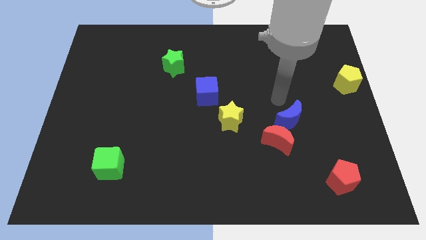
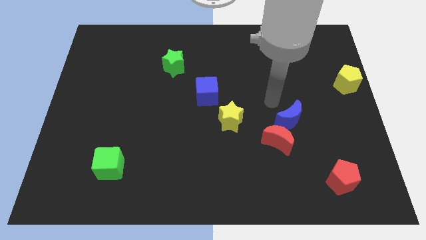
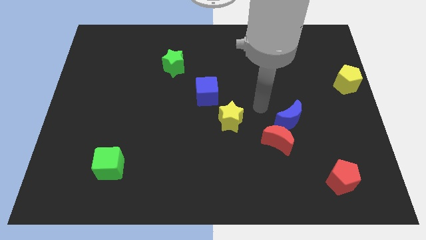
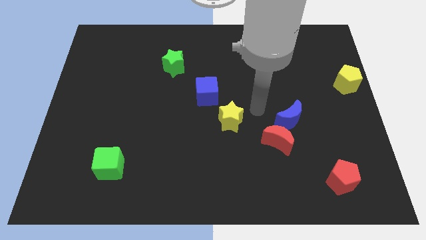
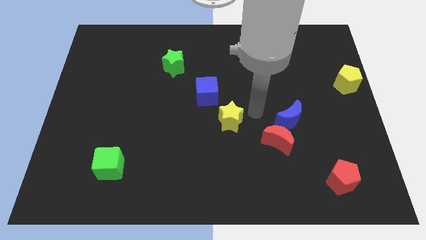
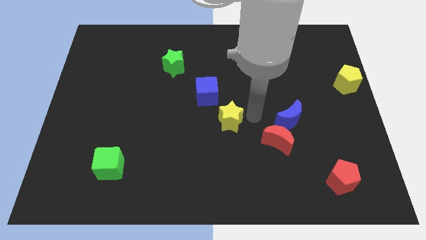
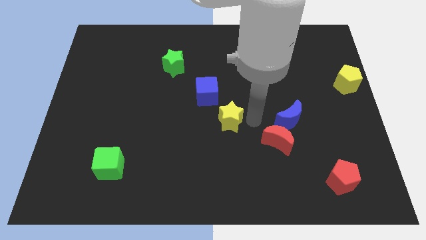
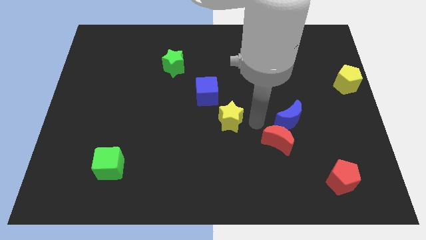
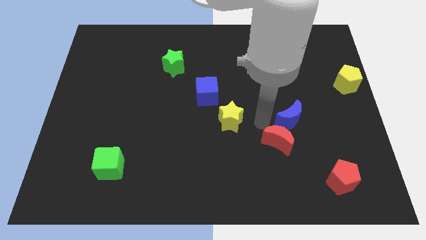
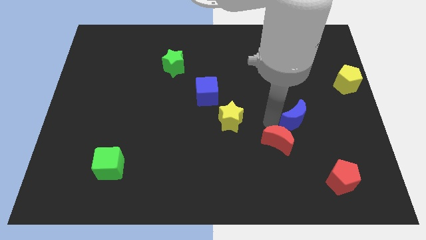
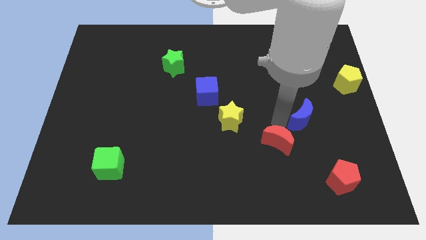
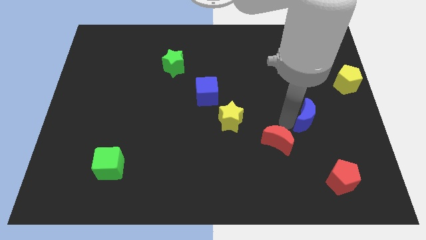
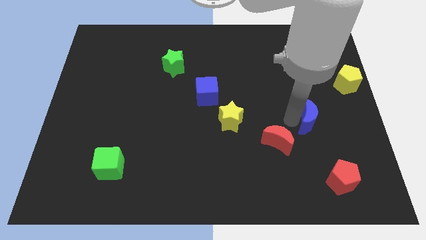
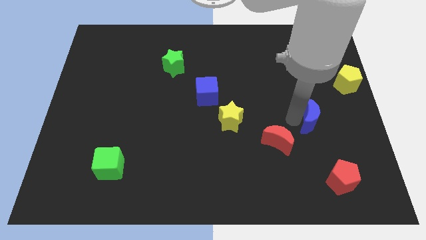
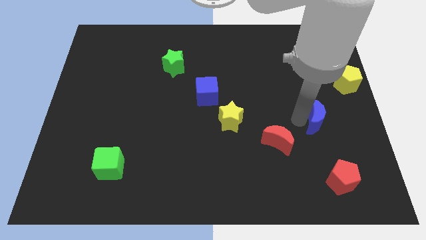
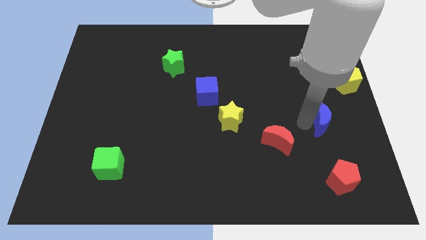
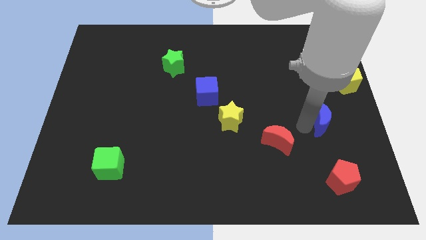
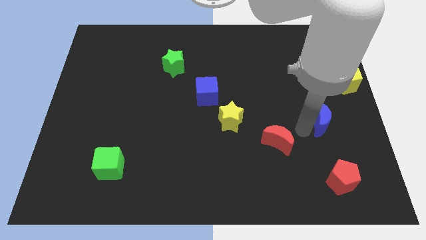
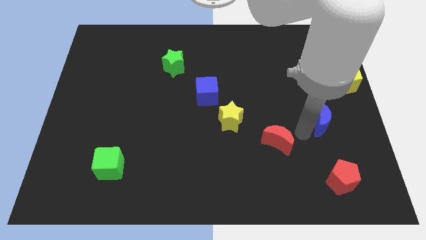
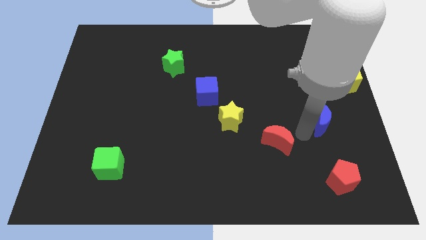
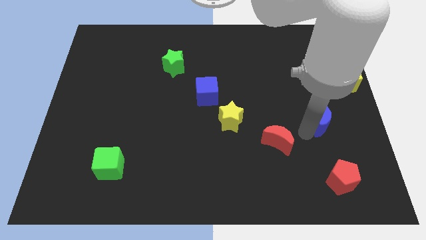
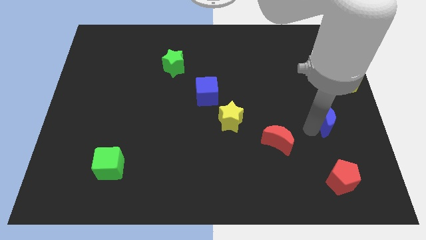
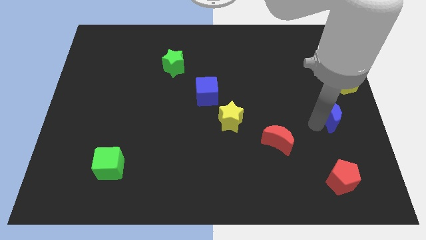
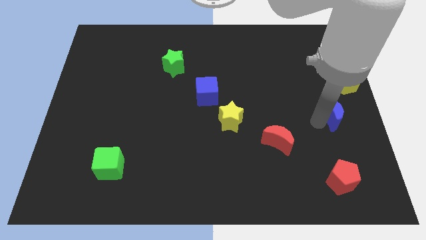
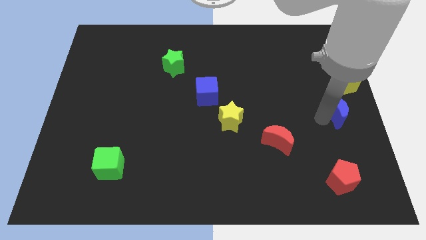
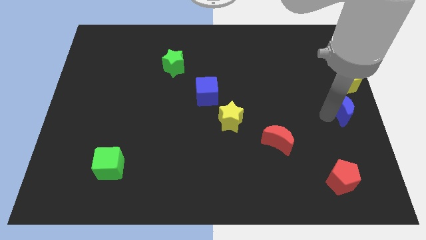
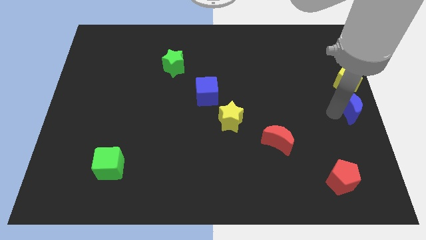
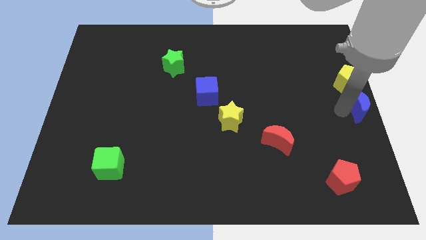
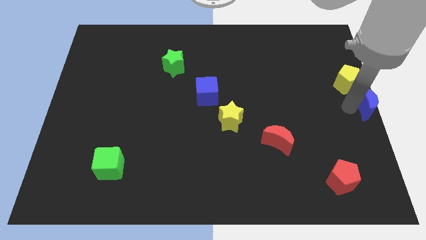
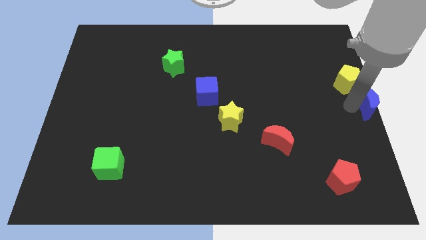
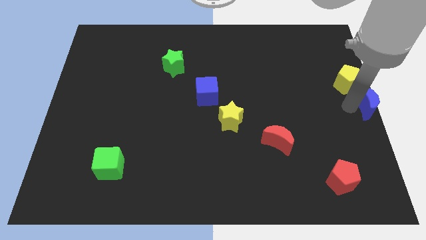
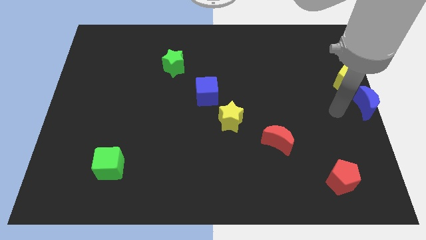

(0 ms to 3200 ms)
place the blue crescent below the yellow pentagon

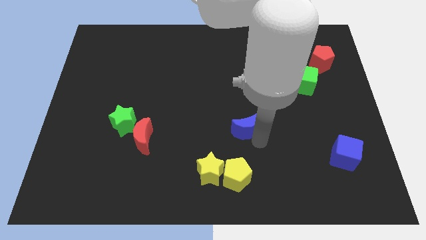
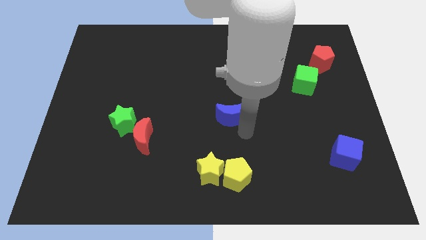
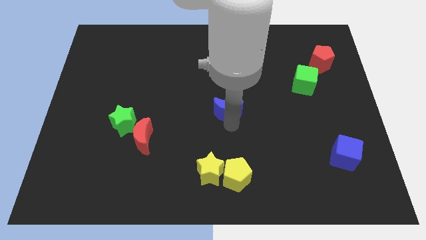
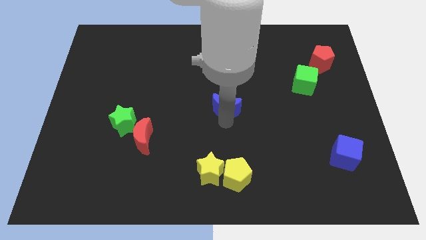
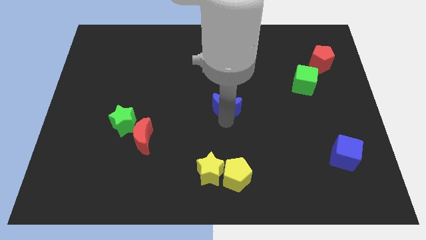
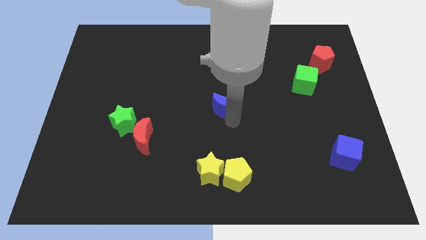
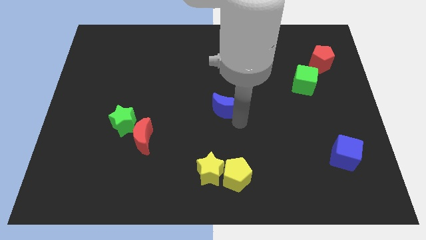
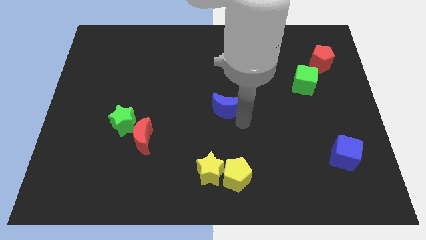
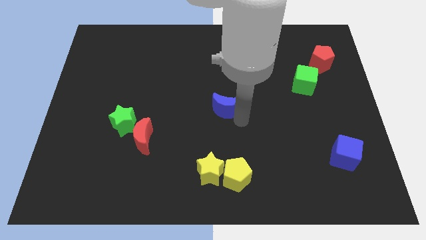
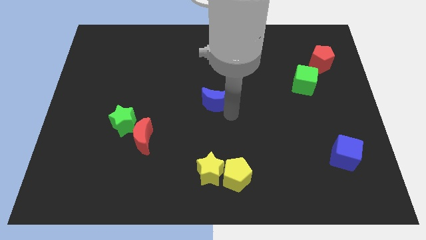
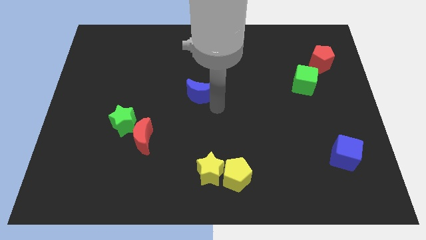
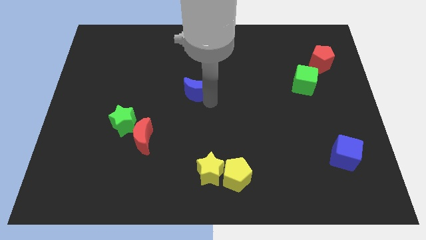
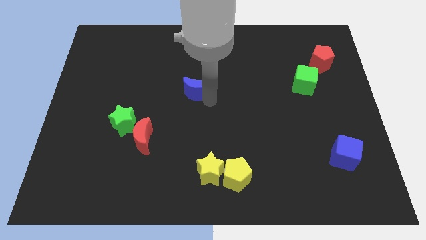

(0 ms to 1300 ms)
move the blue moon to the middle of the board

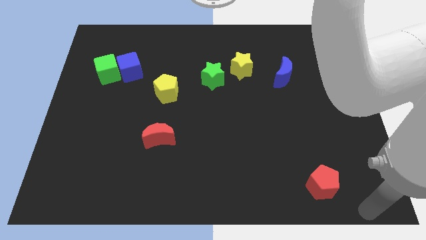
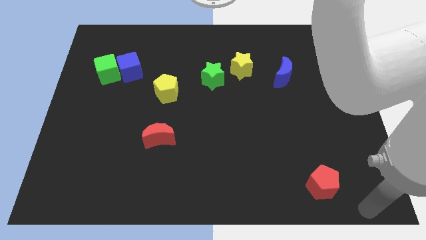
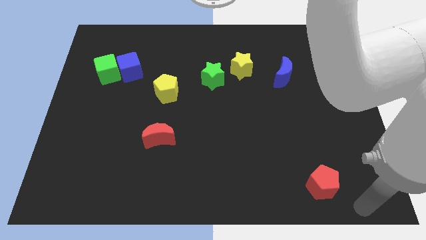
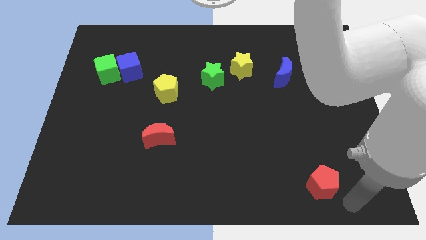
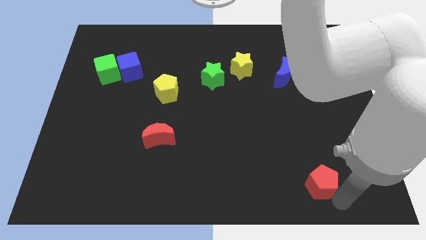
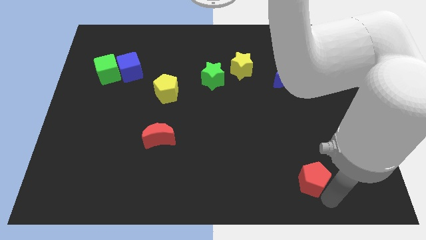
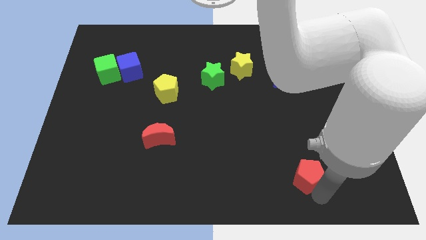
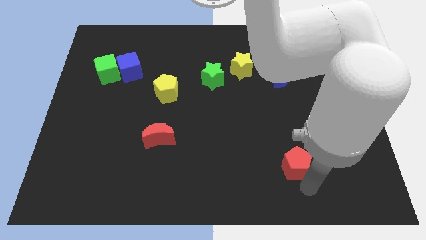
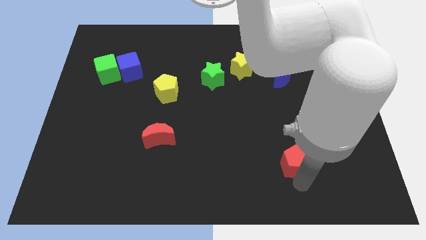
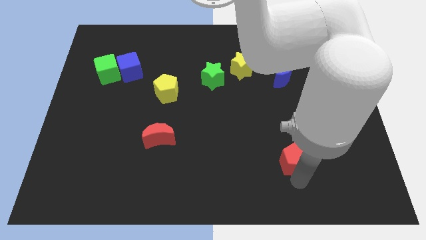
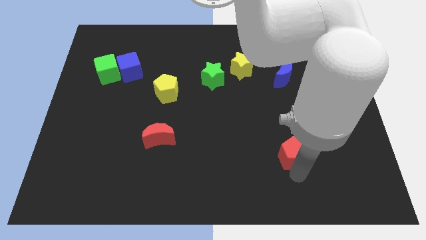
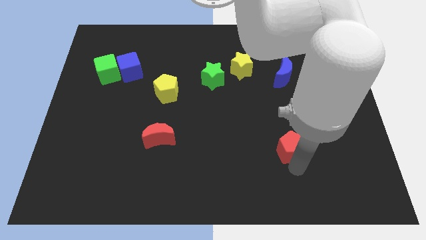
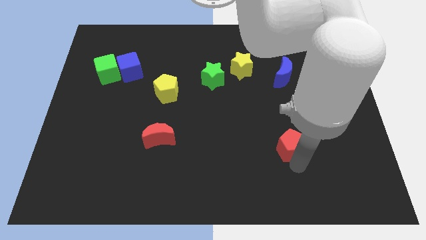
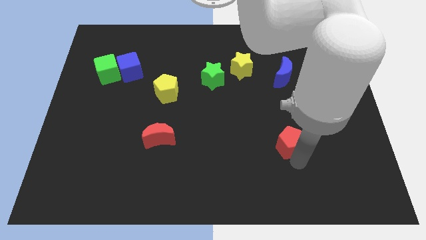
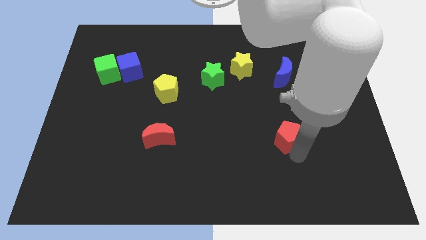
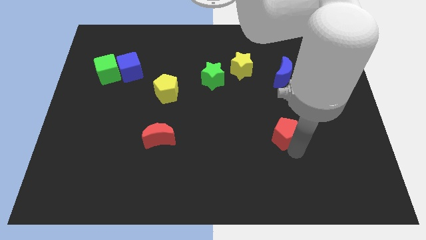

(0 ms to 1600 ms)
place the red pentagon to the right of the red moon

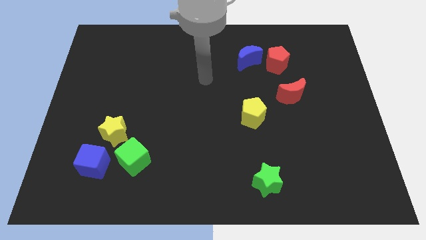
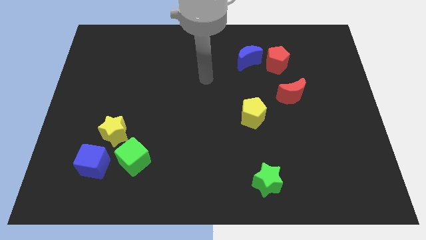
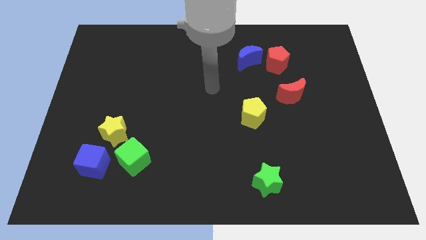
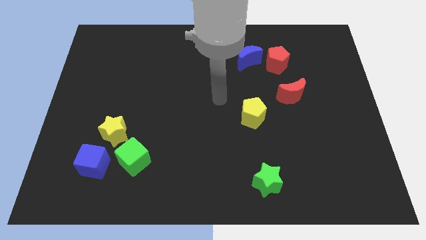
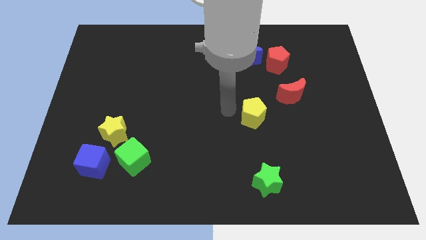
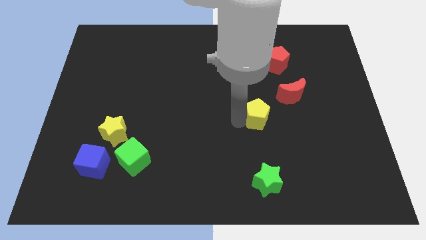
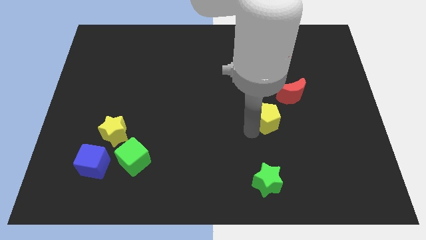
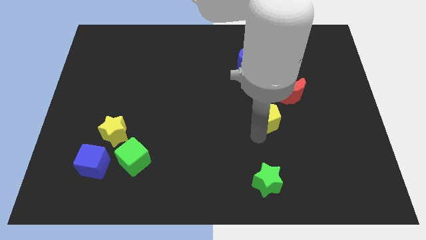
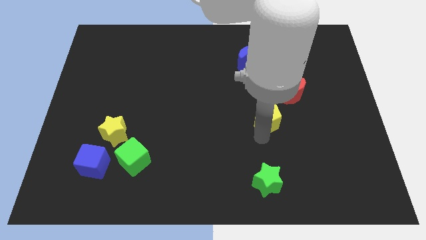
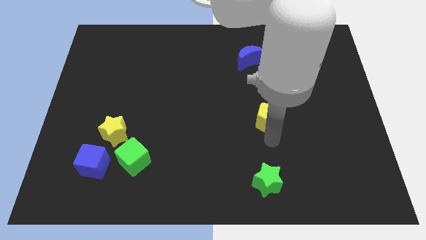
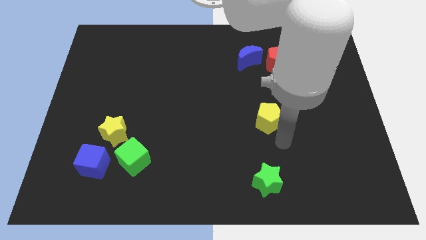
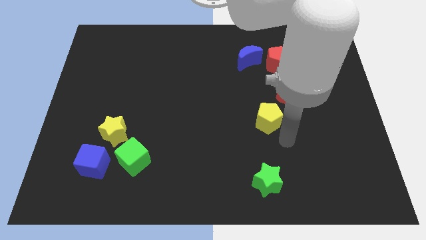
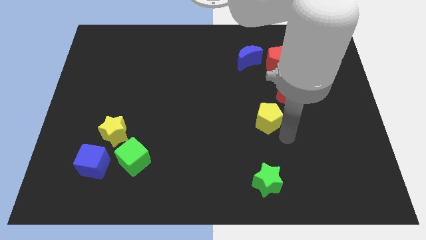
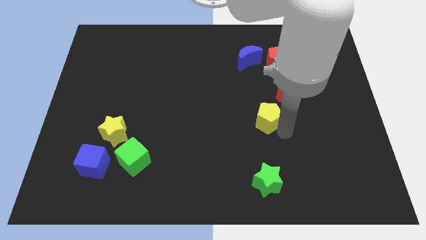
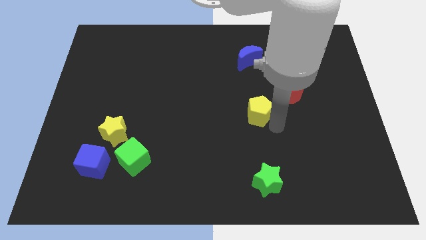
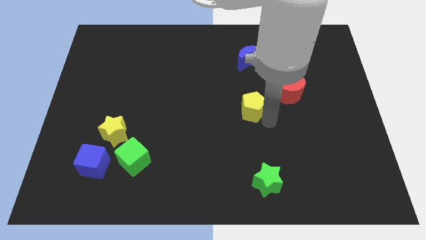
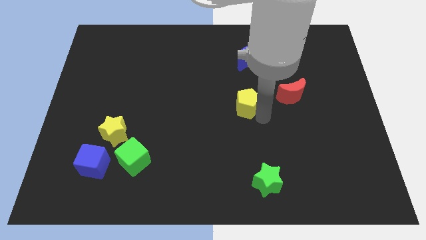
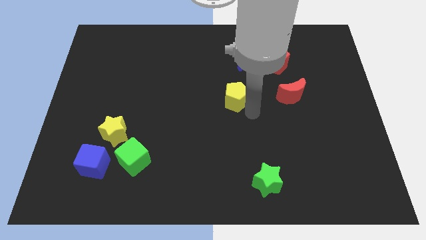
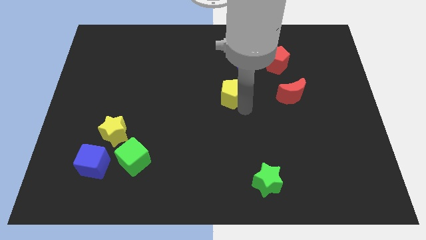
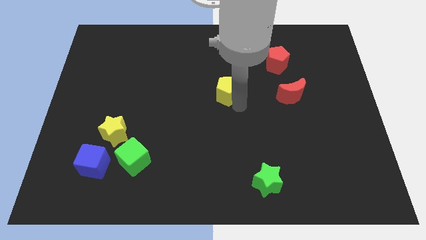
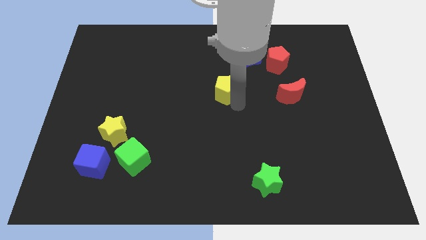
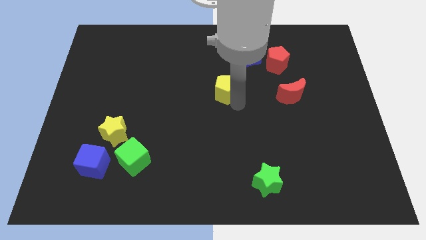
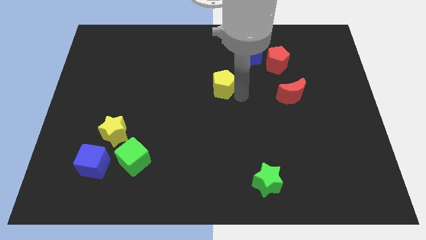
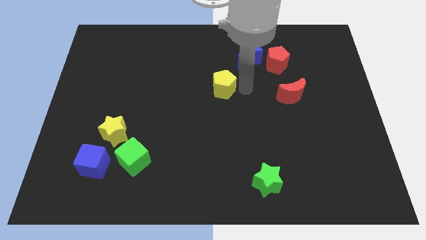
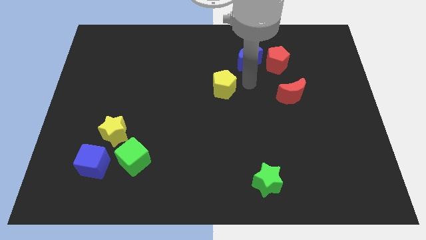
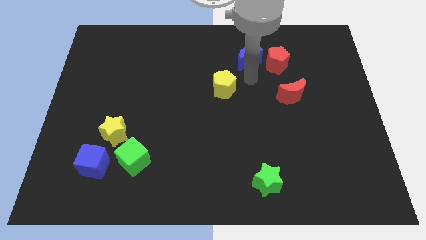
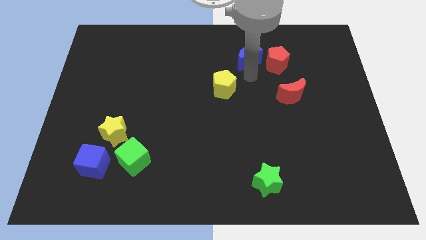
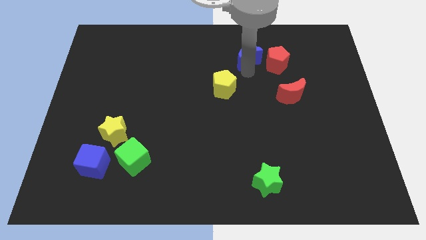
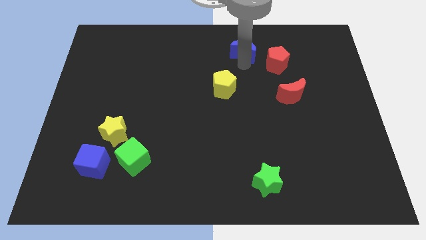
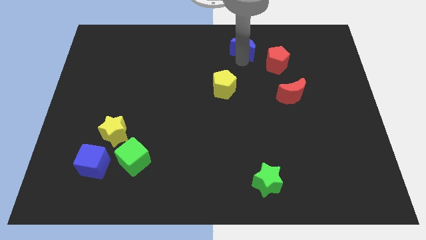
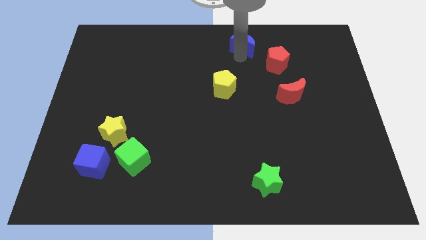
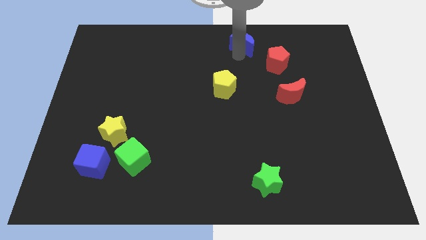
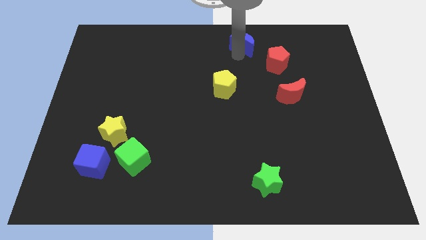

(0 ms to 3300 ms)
push the yellow pentagon and blue crescent diagnol to each other
